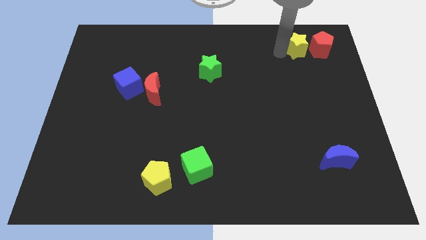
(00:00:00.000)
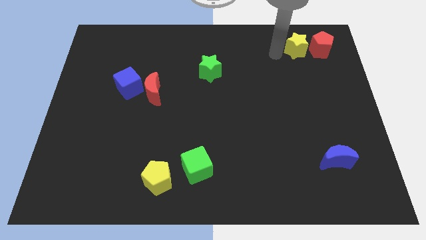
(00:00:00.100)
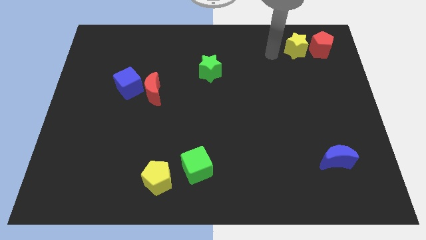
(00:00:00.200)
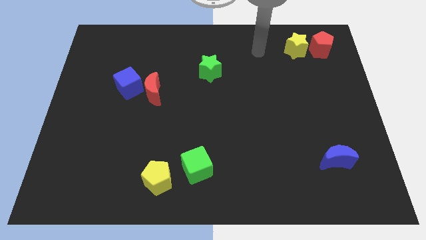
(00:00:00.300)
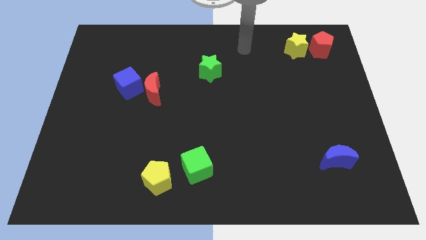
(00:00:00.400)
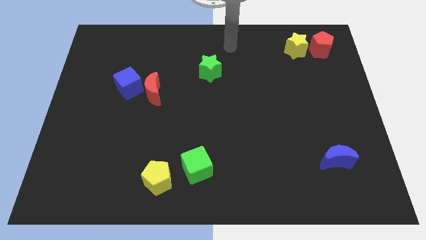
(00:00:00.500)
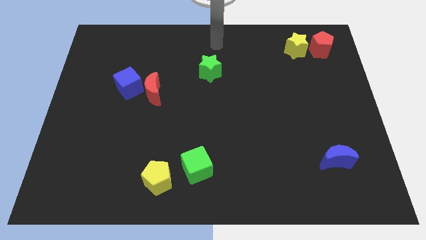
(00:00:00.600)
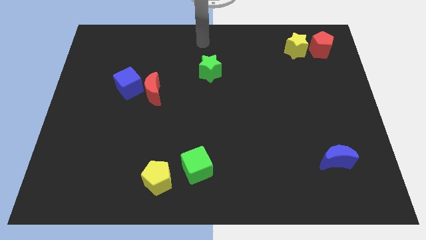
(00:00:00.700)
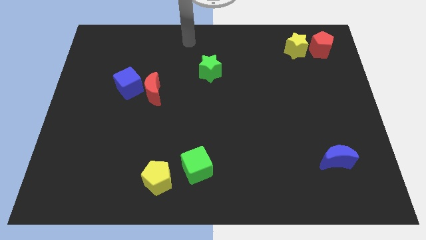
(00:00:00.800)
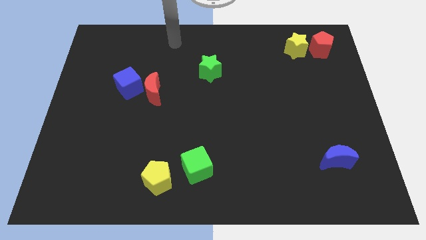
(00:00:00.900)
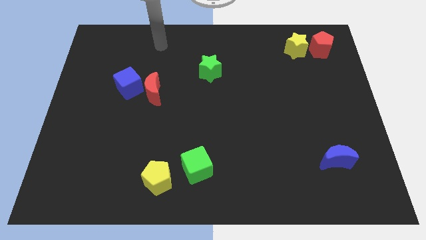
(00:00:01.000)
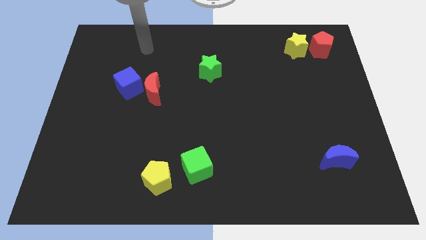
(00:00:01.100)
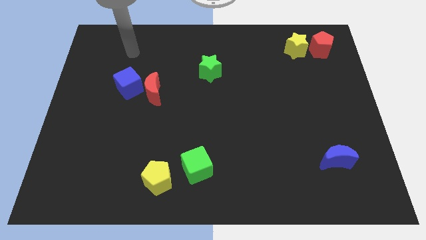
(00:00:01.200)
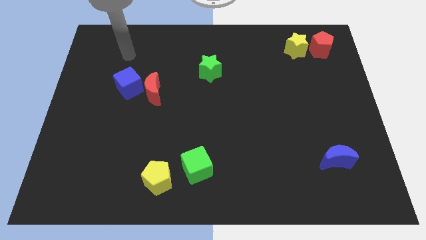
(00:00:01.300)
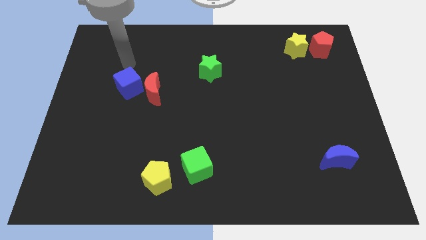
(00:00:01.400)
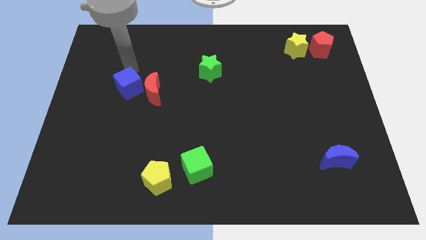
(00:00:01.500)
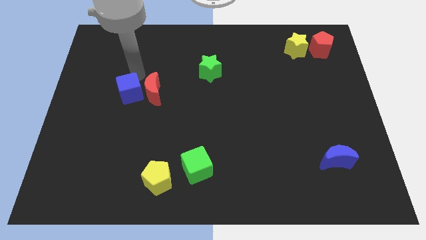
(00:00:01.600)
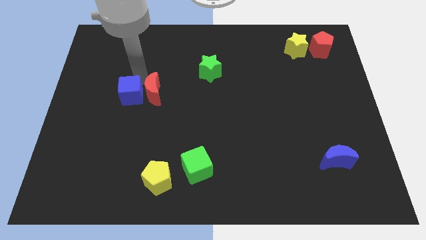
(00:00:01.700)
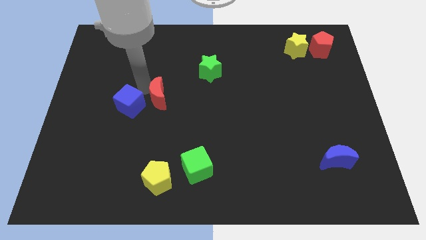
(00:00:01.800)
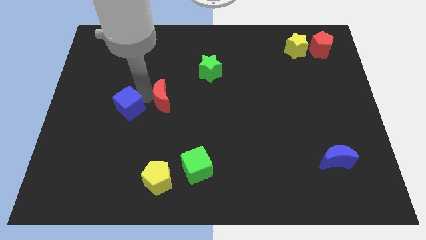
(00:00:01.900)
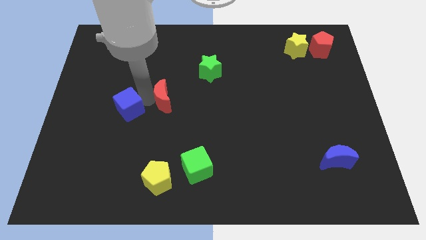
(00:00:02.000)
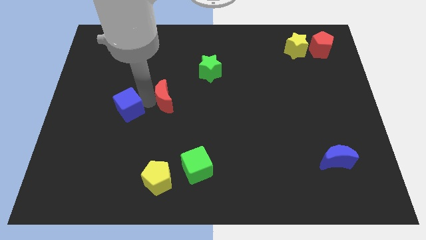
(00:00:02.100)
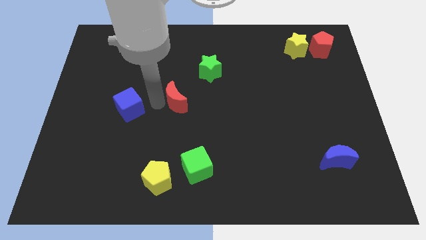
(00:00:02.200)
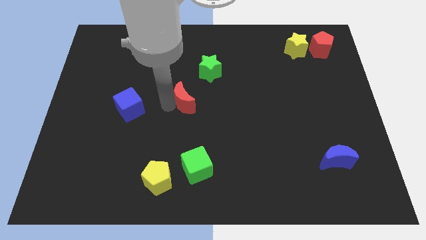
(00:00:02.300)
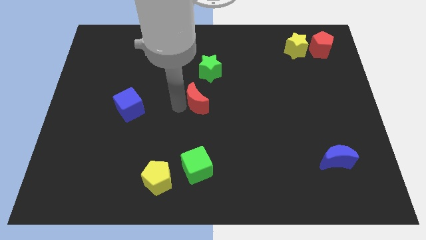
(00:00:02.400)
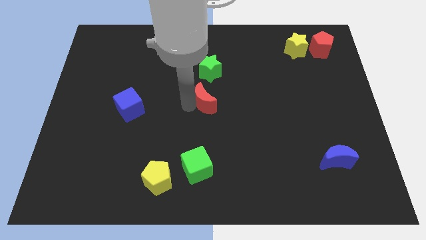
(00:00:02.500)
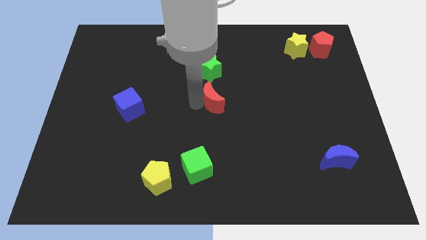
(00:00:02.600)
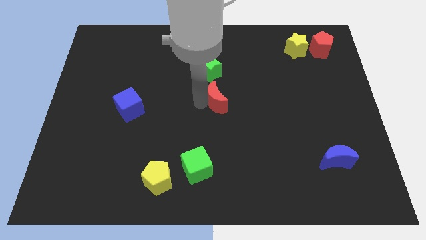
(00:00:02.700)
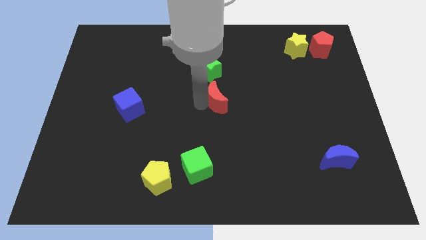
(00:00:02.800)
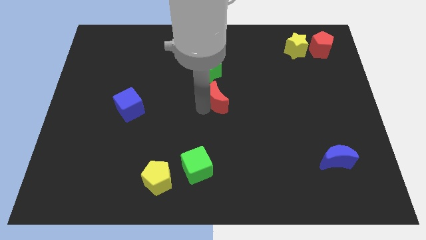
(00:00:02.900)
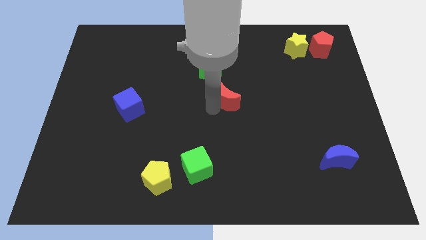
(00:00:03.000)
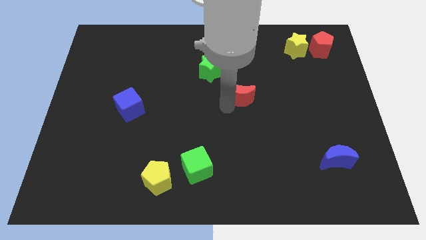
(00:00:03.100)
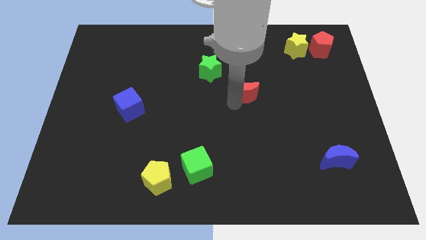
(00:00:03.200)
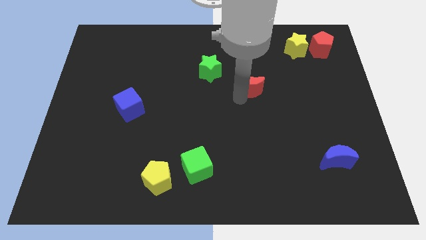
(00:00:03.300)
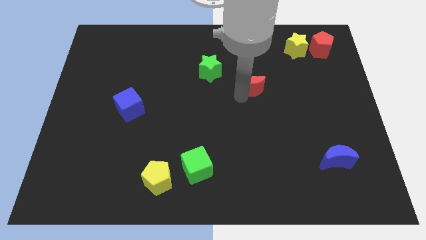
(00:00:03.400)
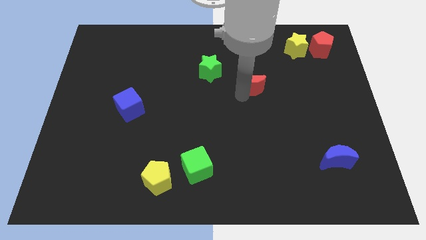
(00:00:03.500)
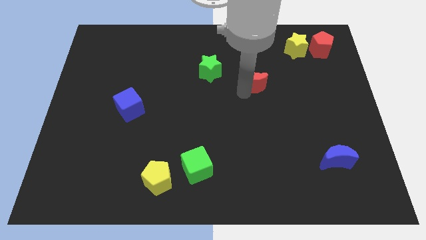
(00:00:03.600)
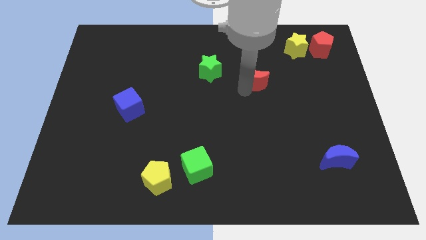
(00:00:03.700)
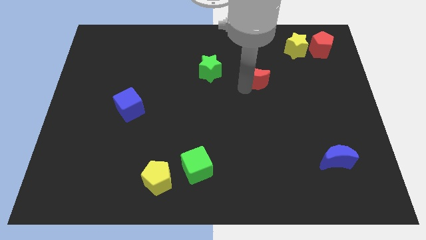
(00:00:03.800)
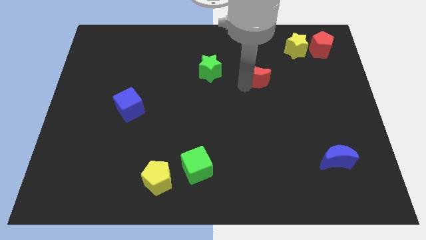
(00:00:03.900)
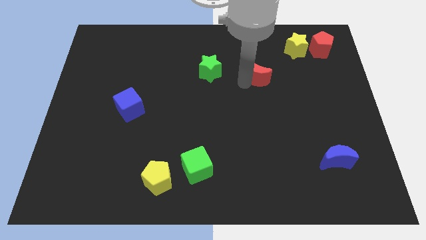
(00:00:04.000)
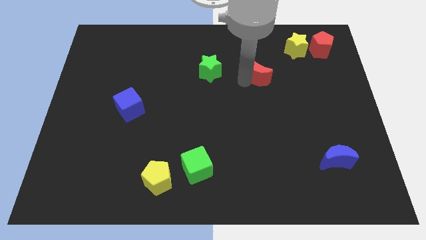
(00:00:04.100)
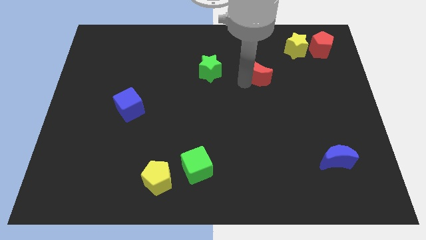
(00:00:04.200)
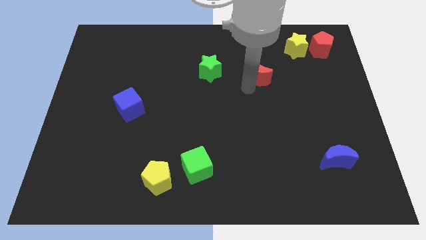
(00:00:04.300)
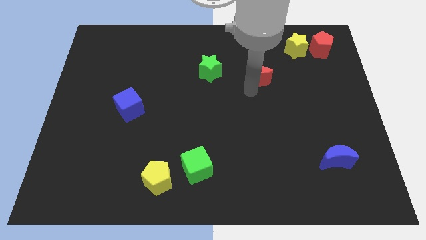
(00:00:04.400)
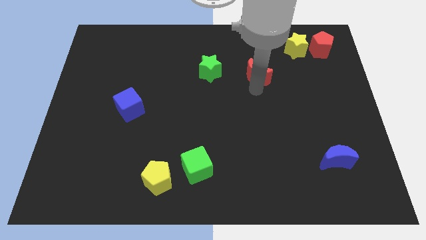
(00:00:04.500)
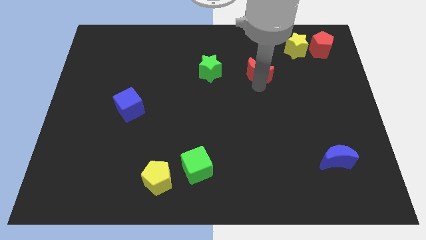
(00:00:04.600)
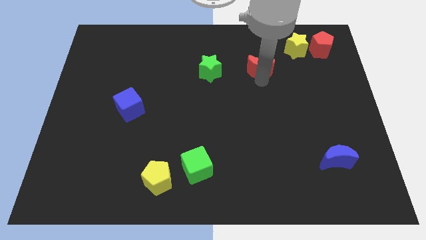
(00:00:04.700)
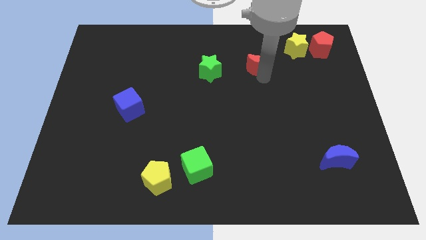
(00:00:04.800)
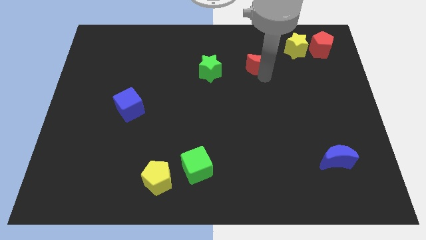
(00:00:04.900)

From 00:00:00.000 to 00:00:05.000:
move the red moon to the right side of the green star

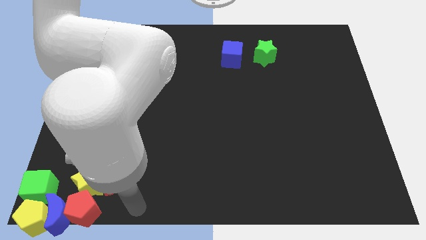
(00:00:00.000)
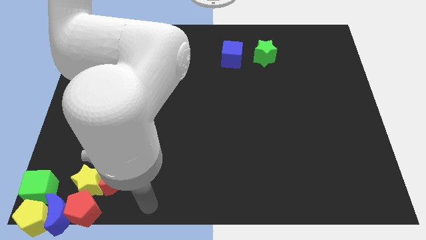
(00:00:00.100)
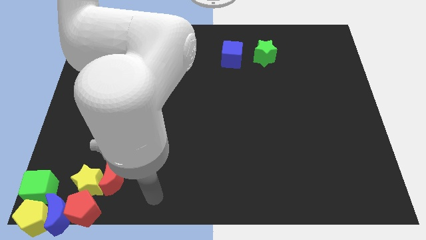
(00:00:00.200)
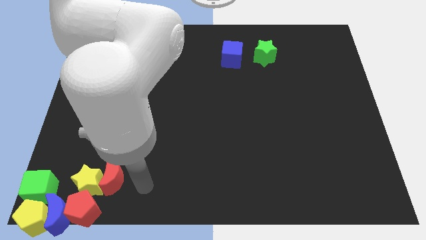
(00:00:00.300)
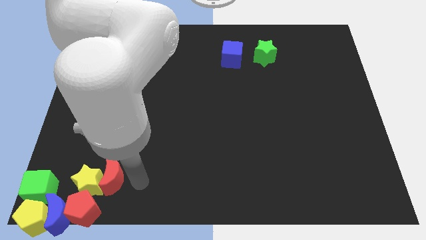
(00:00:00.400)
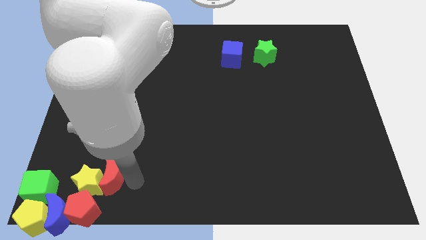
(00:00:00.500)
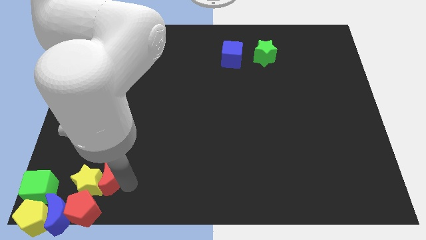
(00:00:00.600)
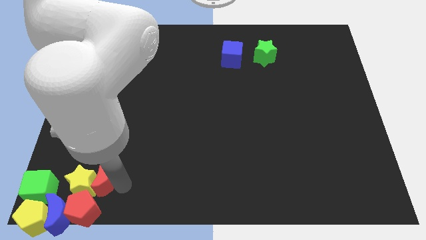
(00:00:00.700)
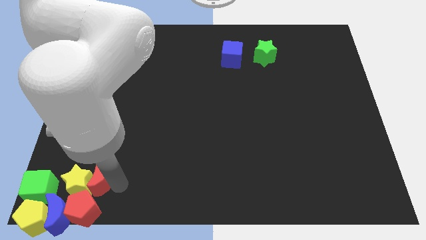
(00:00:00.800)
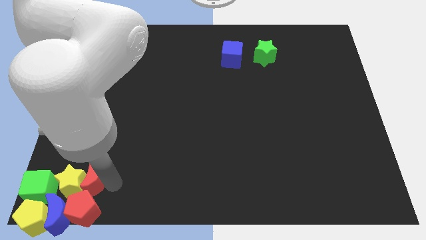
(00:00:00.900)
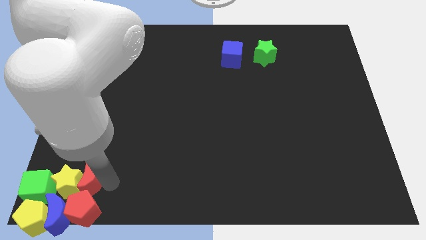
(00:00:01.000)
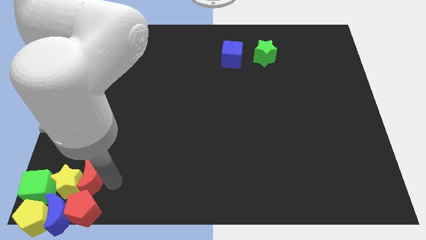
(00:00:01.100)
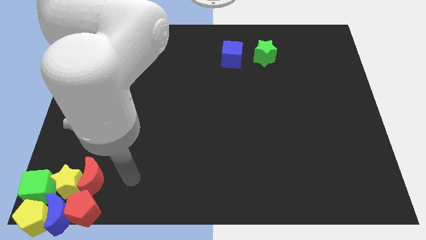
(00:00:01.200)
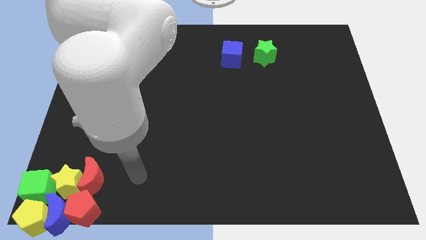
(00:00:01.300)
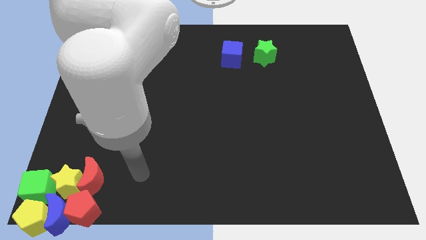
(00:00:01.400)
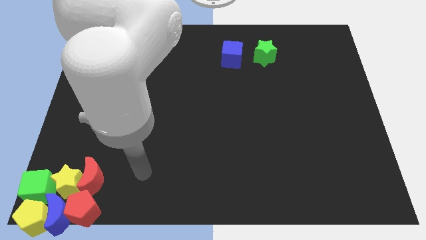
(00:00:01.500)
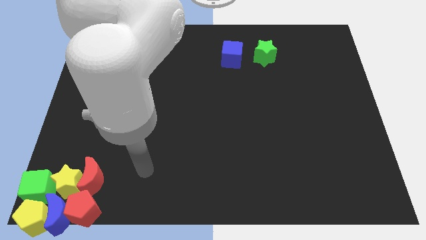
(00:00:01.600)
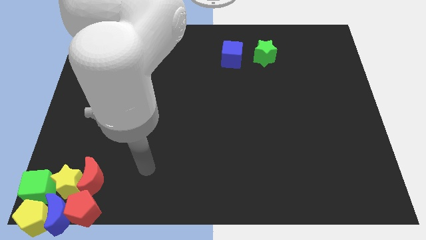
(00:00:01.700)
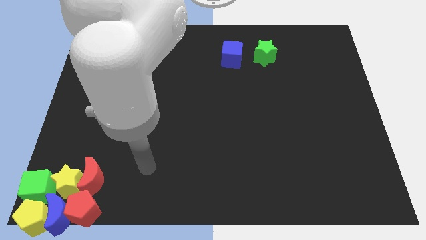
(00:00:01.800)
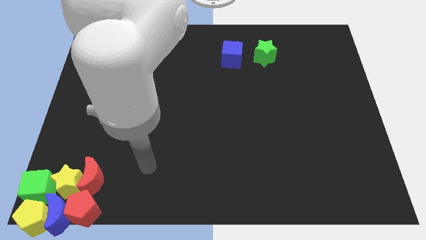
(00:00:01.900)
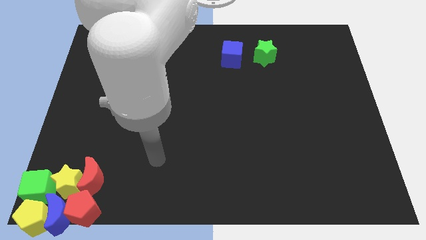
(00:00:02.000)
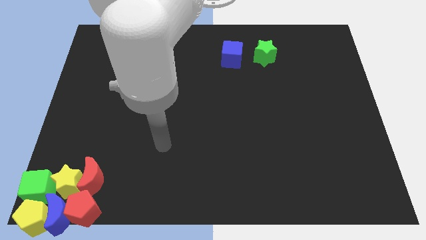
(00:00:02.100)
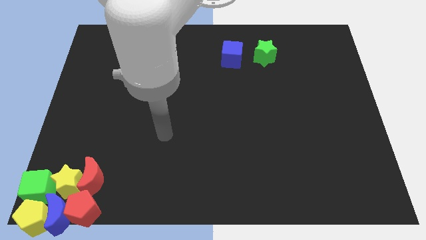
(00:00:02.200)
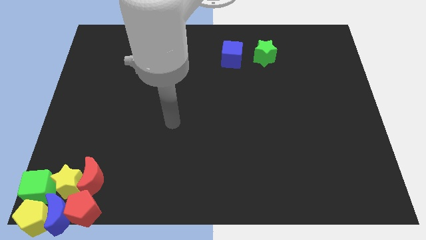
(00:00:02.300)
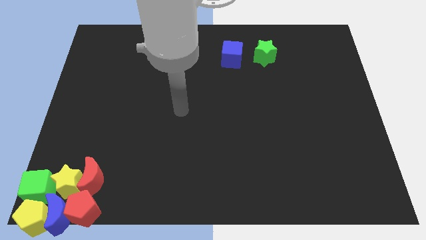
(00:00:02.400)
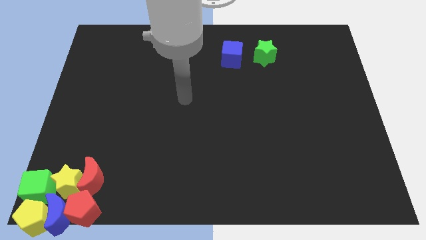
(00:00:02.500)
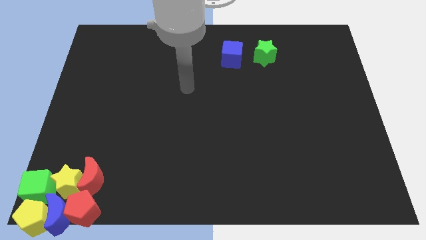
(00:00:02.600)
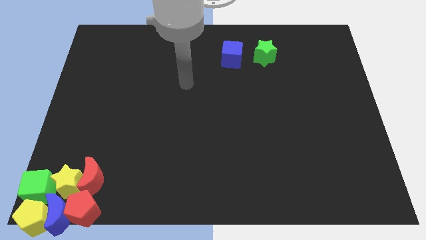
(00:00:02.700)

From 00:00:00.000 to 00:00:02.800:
move the red crescent and yellow star into the green cube

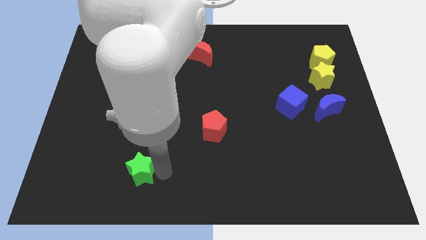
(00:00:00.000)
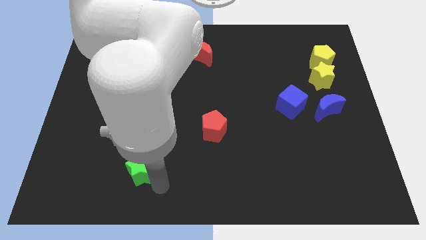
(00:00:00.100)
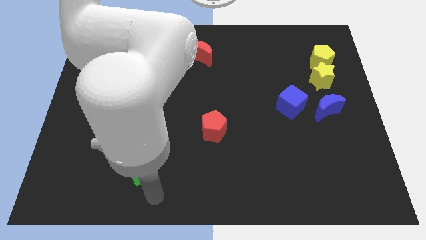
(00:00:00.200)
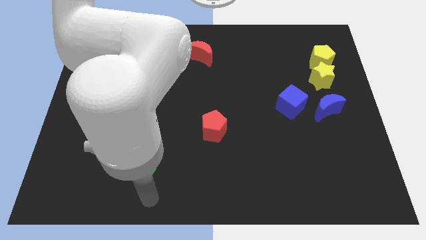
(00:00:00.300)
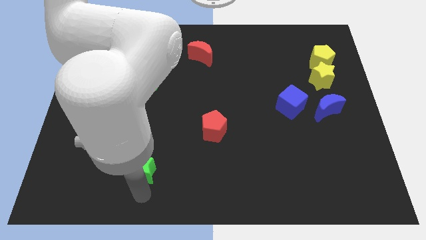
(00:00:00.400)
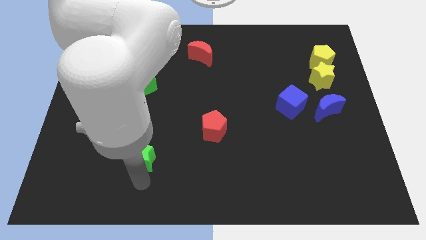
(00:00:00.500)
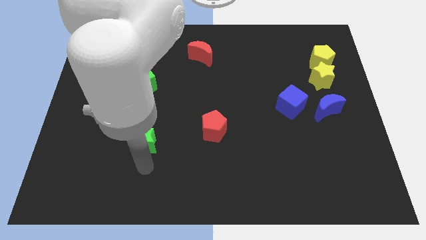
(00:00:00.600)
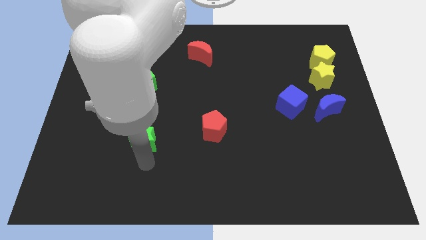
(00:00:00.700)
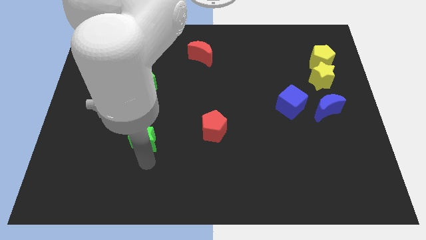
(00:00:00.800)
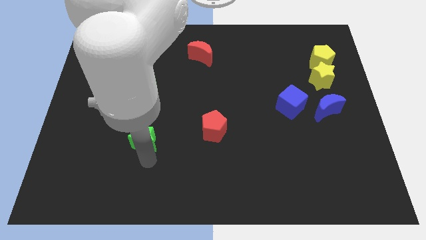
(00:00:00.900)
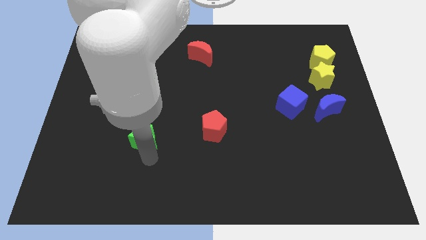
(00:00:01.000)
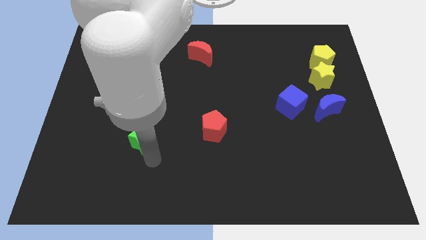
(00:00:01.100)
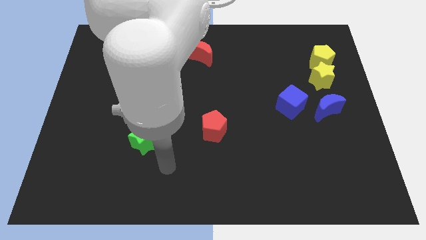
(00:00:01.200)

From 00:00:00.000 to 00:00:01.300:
move the green star slightly to the left of the red pentagon
